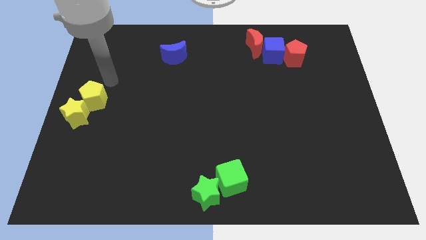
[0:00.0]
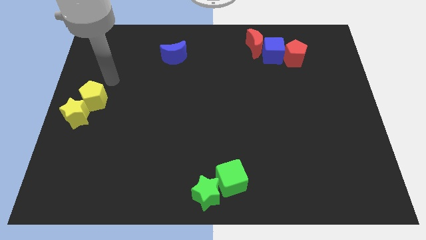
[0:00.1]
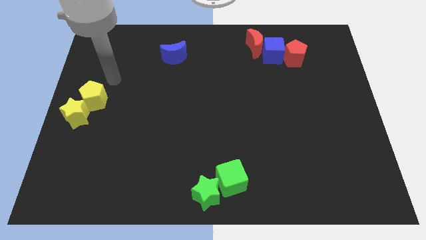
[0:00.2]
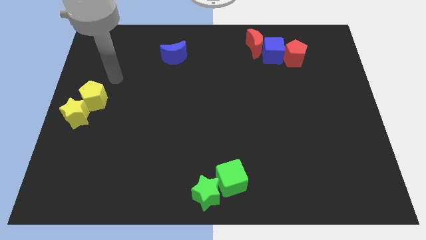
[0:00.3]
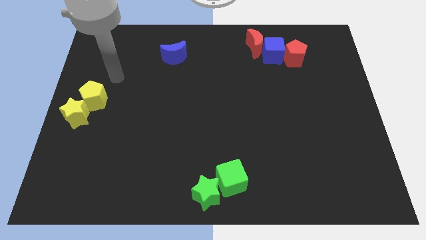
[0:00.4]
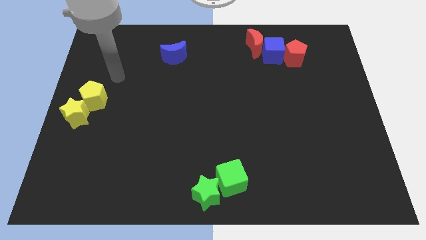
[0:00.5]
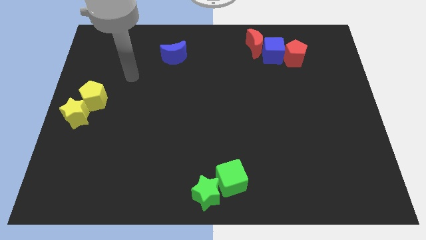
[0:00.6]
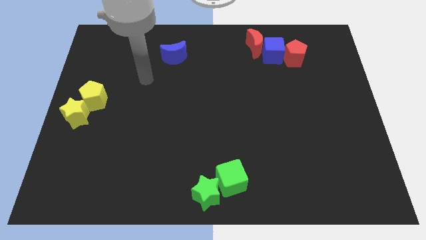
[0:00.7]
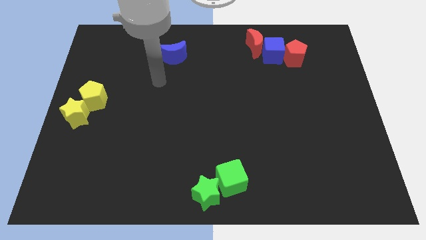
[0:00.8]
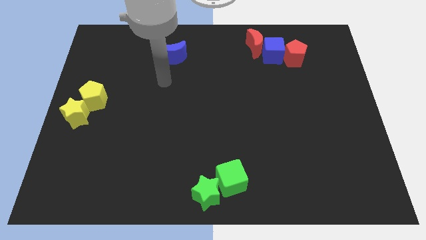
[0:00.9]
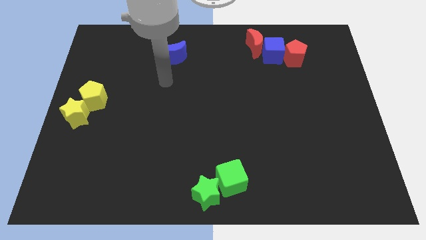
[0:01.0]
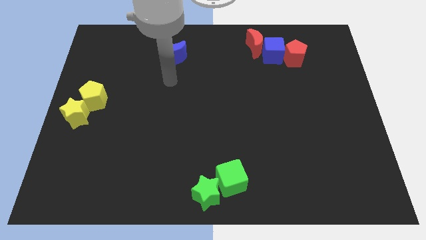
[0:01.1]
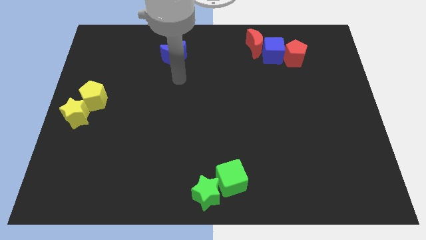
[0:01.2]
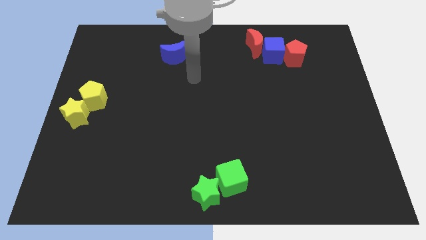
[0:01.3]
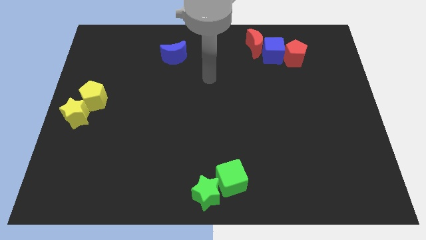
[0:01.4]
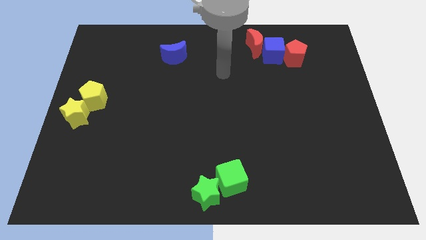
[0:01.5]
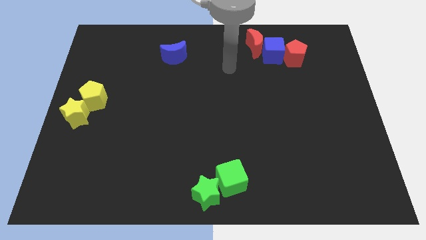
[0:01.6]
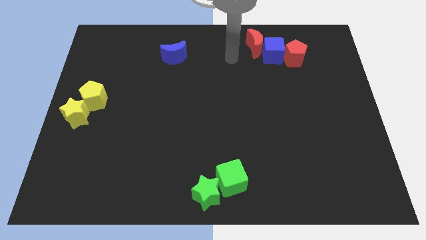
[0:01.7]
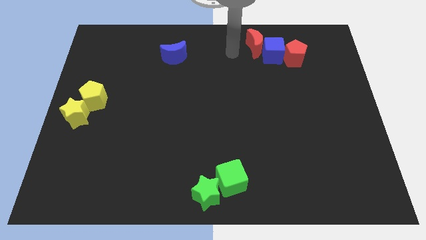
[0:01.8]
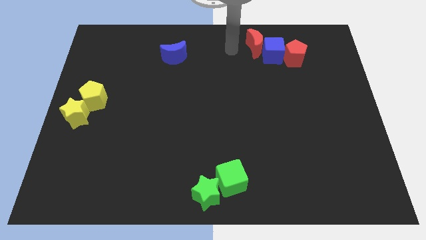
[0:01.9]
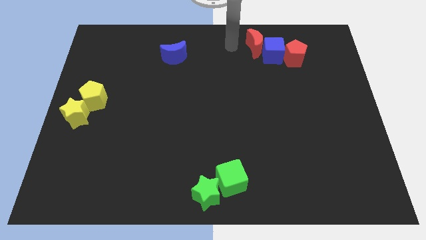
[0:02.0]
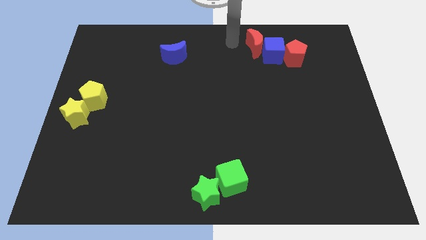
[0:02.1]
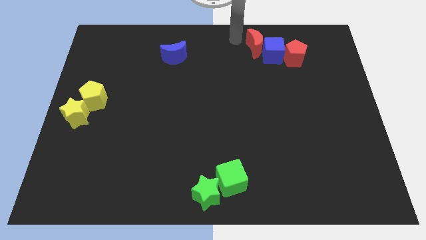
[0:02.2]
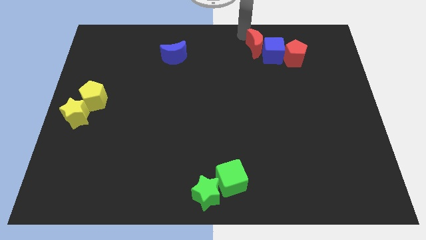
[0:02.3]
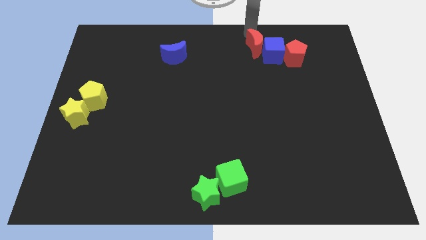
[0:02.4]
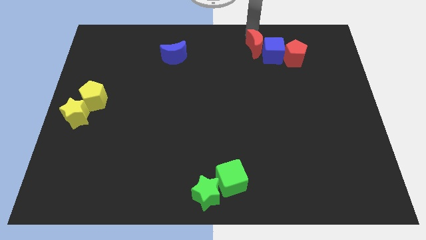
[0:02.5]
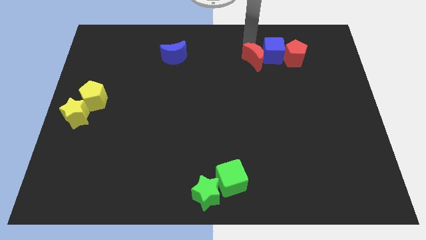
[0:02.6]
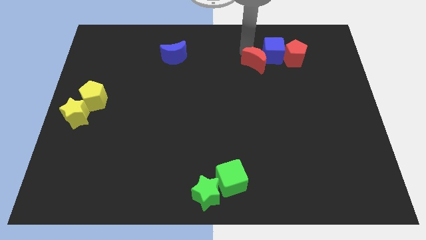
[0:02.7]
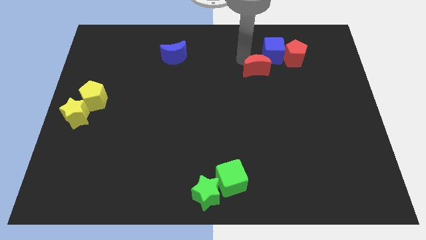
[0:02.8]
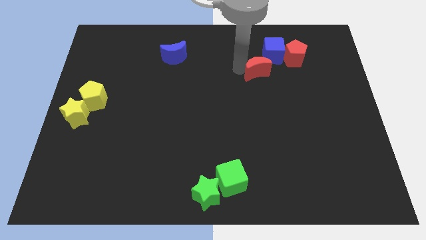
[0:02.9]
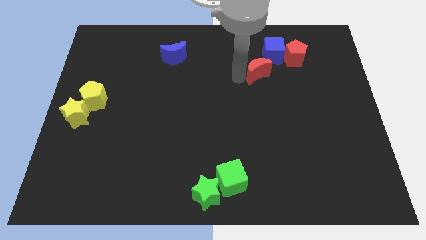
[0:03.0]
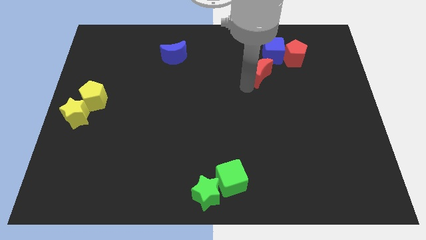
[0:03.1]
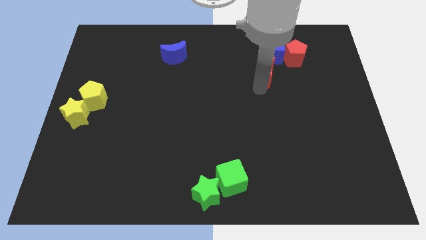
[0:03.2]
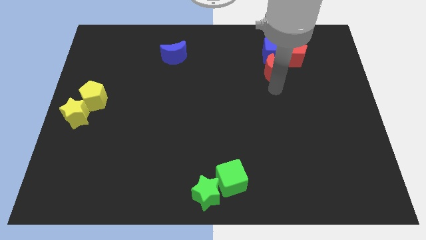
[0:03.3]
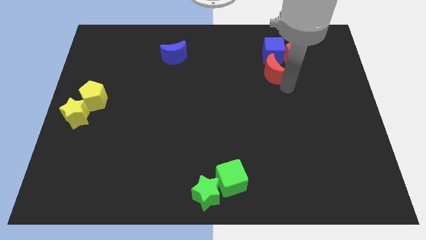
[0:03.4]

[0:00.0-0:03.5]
place the red moon down to the blue square

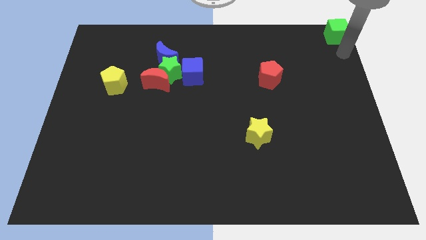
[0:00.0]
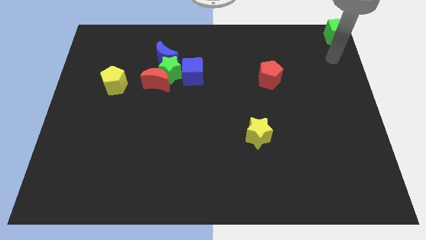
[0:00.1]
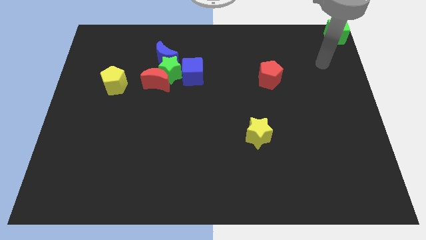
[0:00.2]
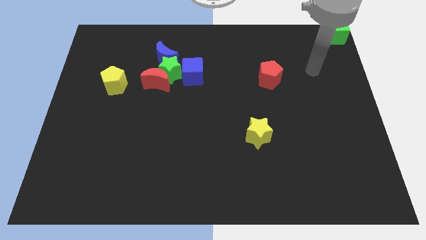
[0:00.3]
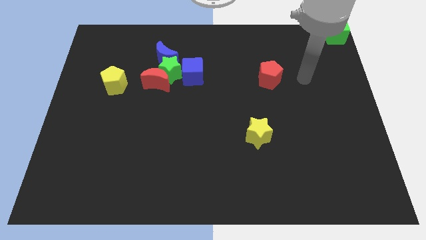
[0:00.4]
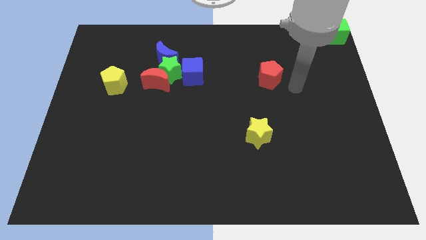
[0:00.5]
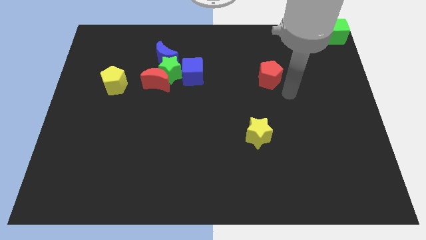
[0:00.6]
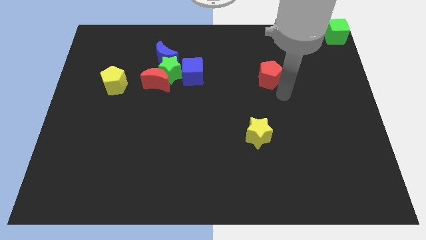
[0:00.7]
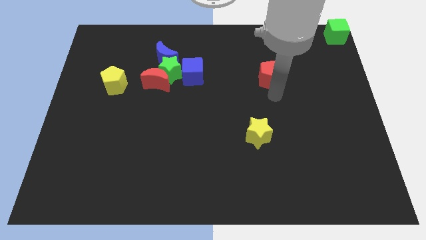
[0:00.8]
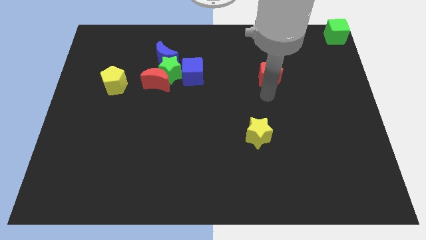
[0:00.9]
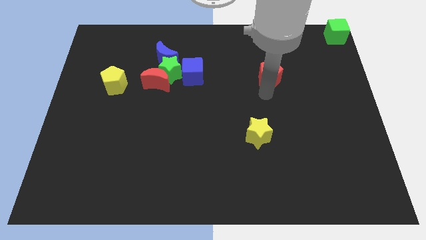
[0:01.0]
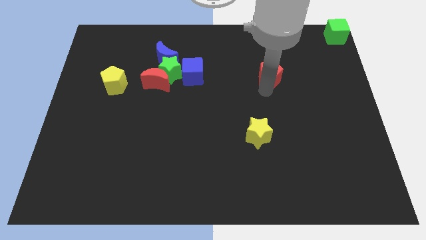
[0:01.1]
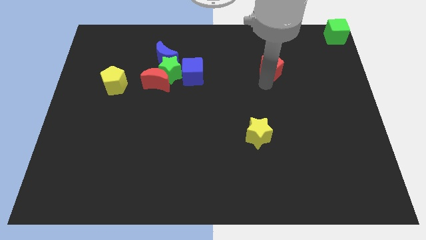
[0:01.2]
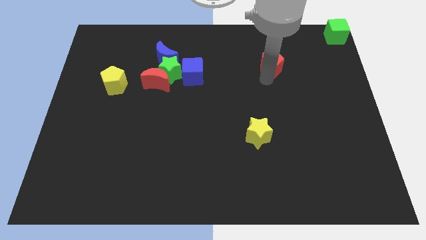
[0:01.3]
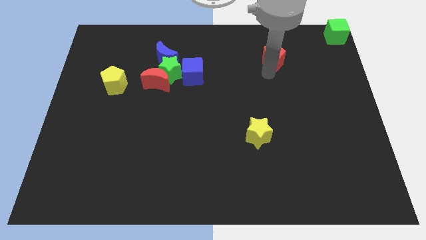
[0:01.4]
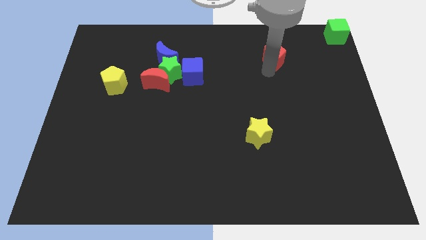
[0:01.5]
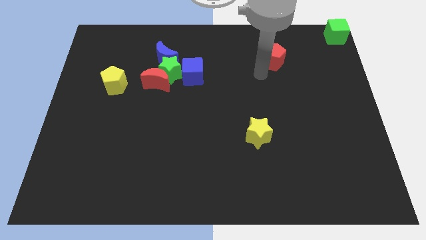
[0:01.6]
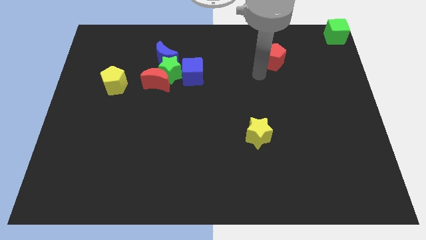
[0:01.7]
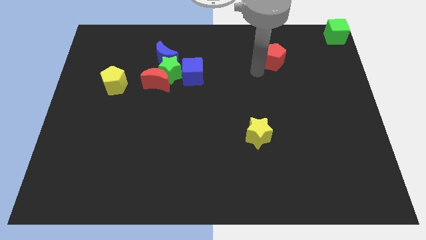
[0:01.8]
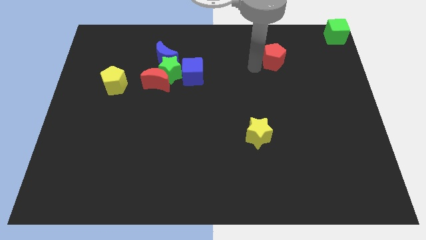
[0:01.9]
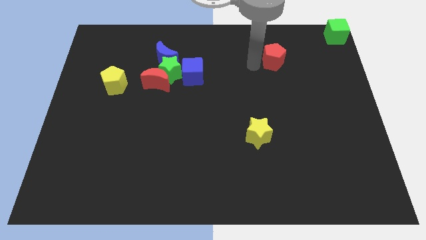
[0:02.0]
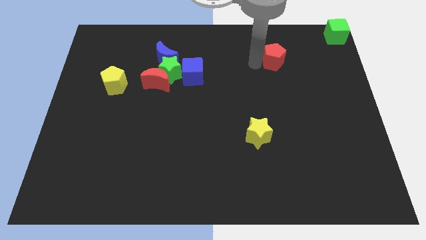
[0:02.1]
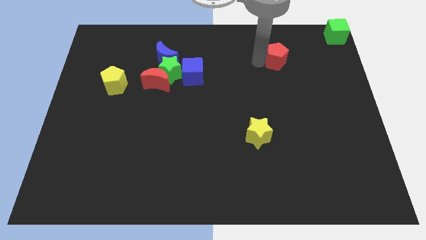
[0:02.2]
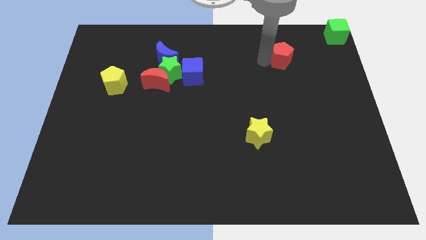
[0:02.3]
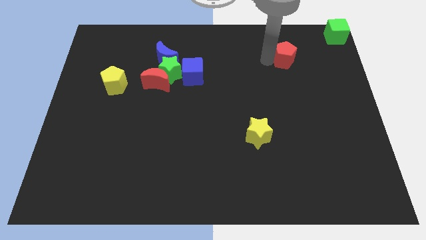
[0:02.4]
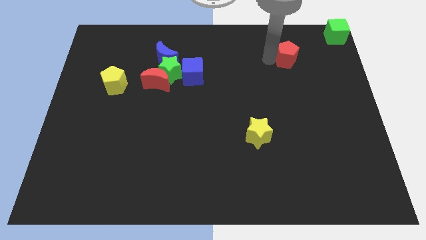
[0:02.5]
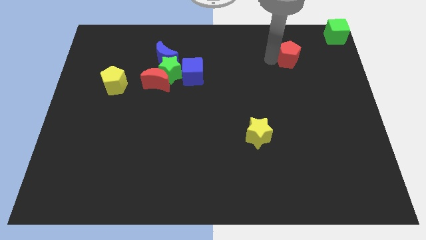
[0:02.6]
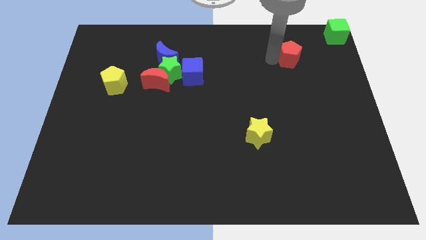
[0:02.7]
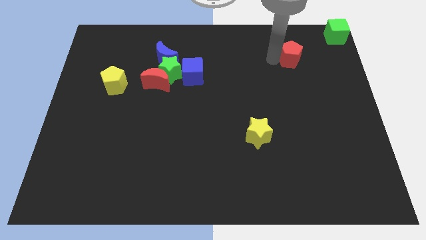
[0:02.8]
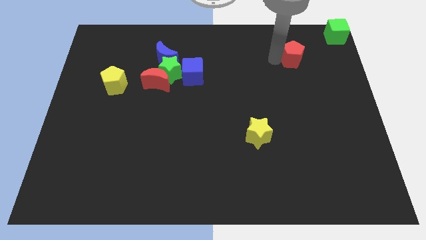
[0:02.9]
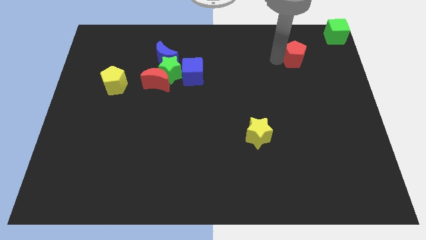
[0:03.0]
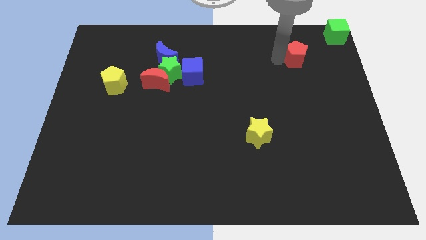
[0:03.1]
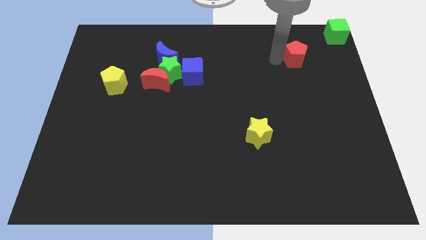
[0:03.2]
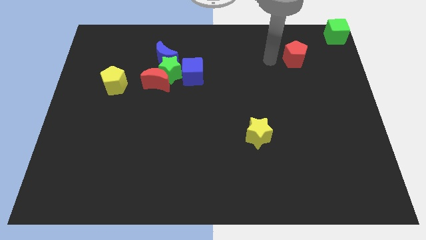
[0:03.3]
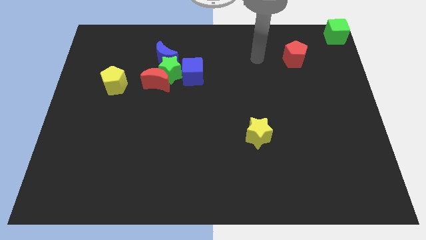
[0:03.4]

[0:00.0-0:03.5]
move the red pentagon diagonally on the bottom left side of the green cube

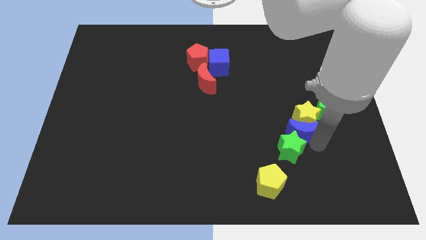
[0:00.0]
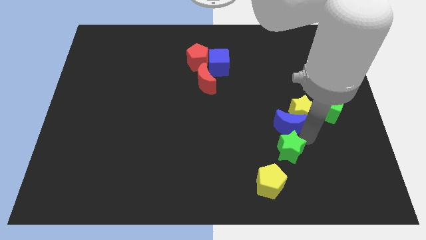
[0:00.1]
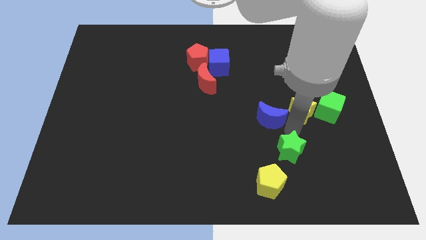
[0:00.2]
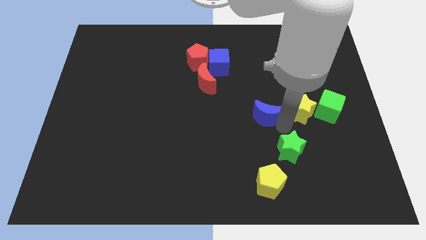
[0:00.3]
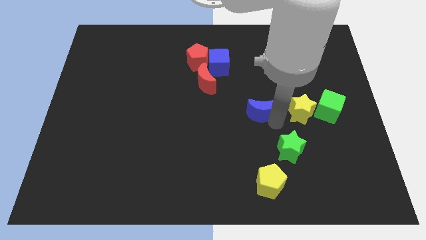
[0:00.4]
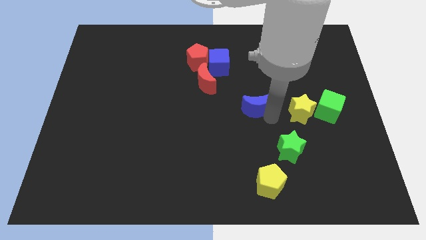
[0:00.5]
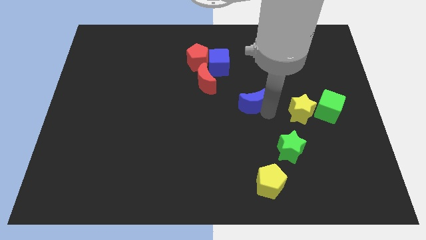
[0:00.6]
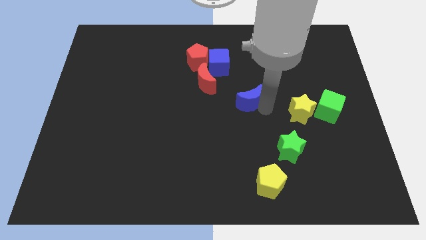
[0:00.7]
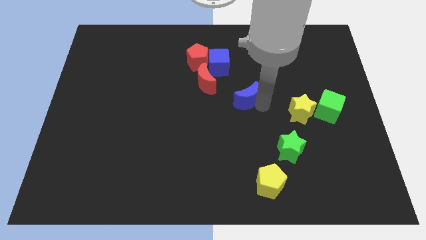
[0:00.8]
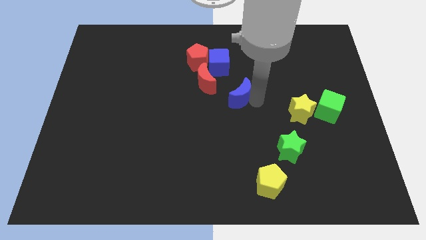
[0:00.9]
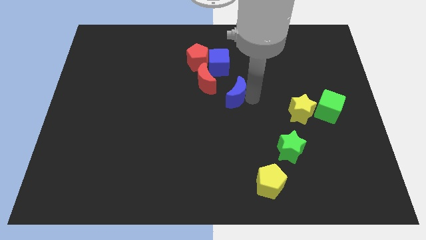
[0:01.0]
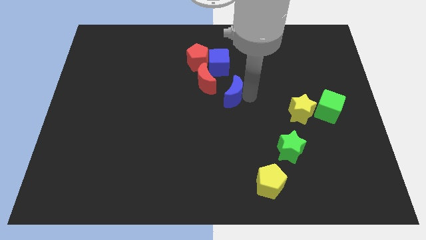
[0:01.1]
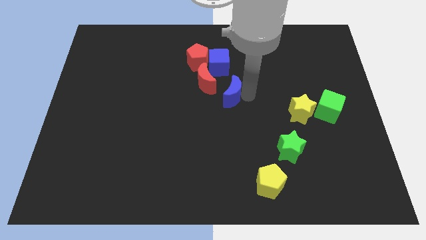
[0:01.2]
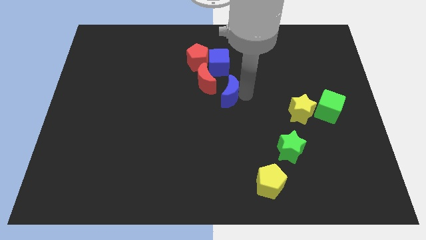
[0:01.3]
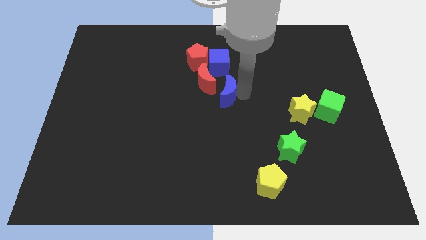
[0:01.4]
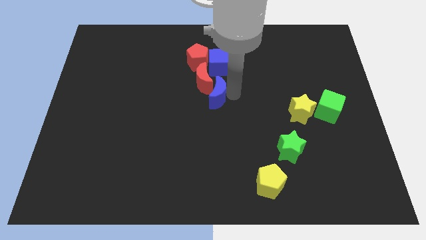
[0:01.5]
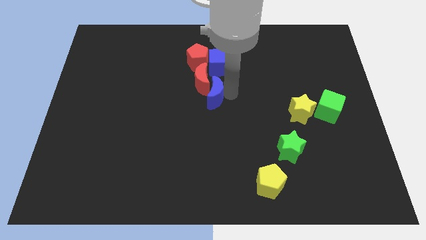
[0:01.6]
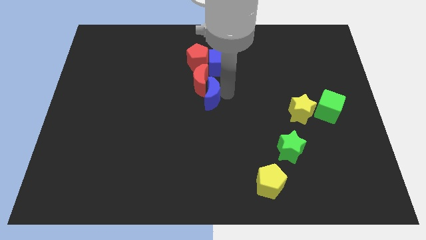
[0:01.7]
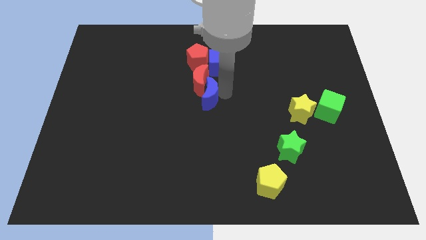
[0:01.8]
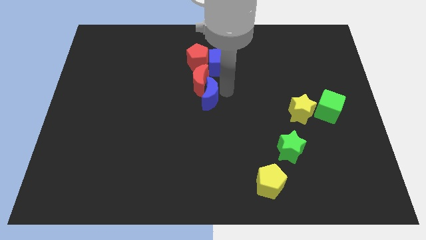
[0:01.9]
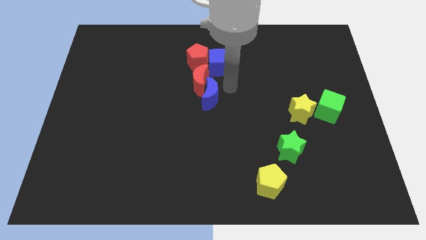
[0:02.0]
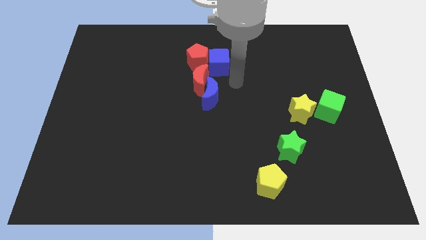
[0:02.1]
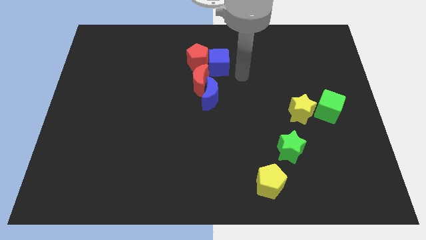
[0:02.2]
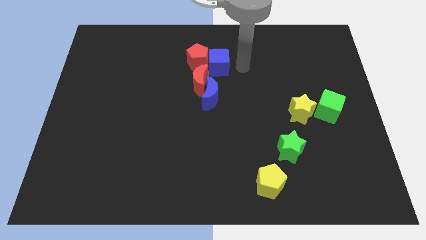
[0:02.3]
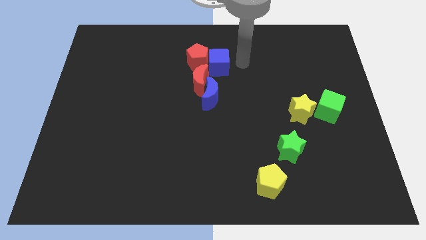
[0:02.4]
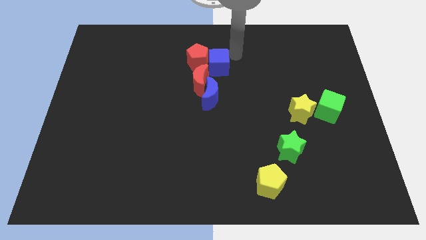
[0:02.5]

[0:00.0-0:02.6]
separate the blue moon from the group of blocks
